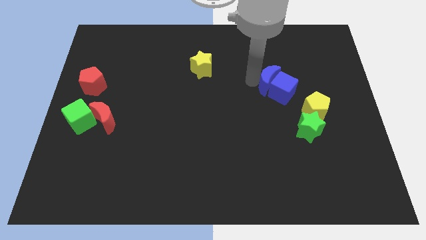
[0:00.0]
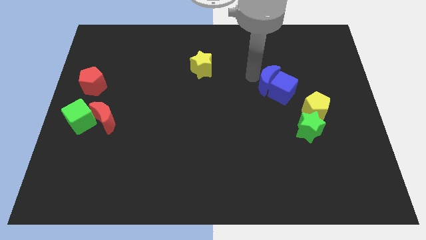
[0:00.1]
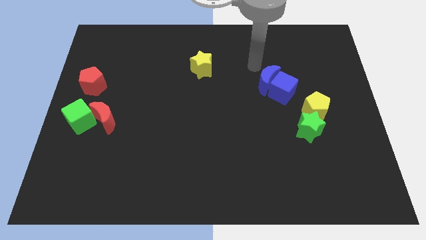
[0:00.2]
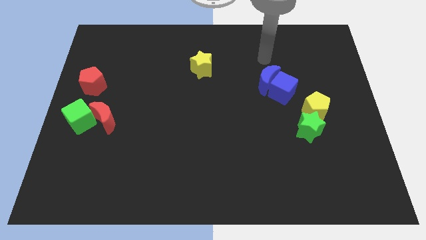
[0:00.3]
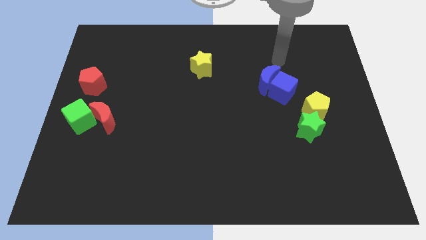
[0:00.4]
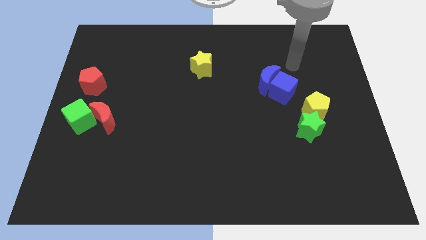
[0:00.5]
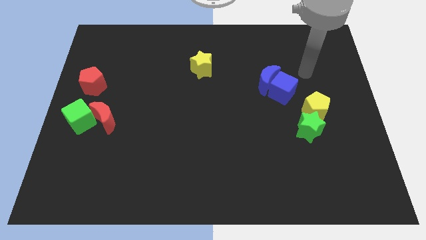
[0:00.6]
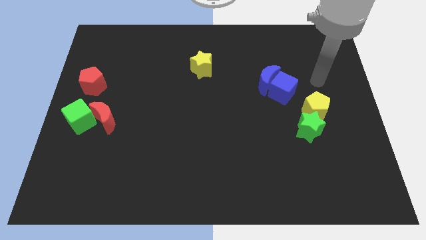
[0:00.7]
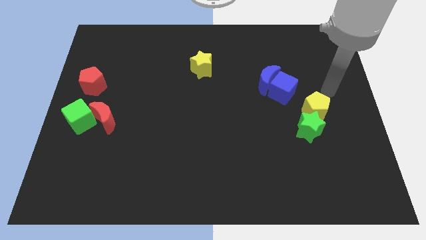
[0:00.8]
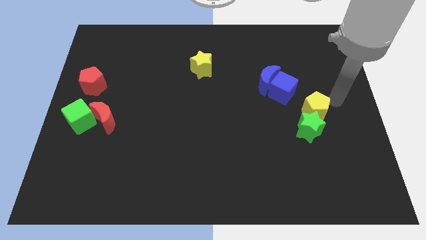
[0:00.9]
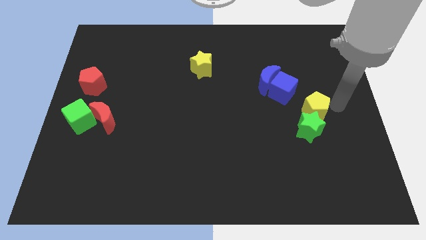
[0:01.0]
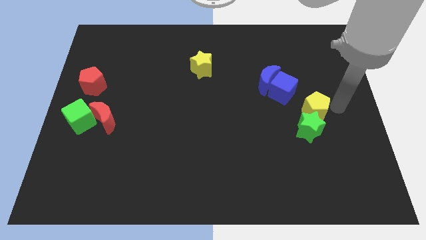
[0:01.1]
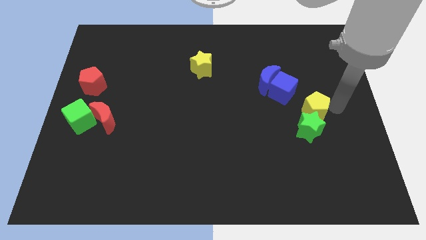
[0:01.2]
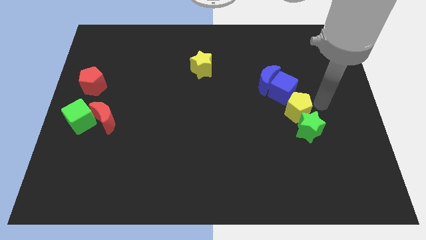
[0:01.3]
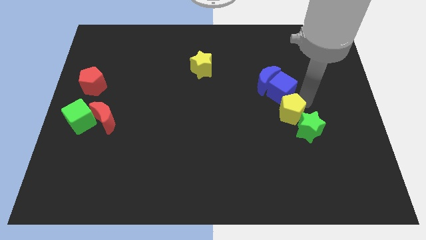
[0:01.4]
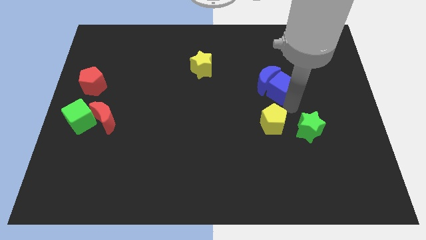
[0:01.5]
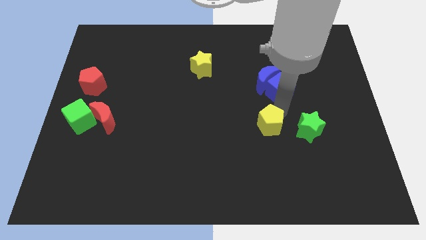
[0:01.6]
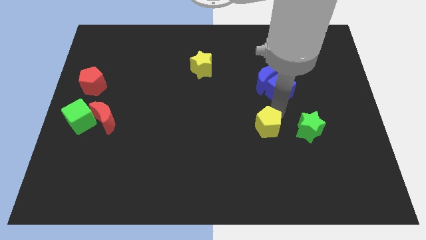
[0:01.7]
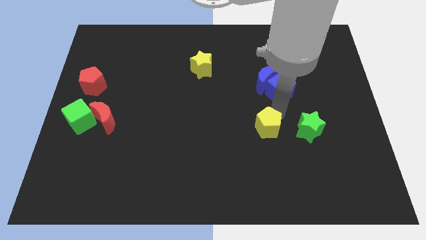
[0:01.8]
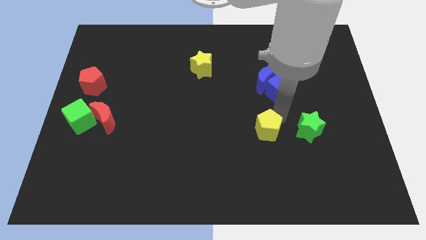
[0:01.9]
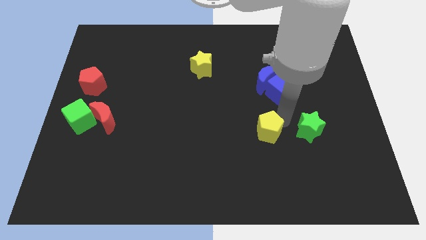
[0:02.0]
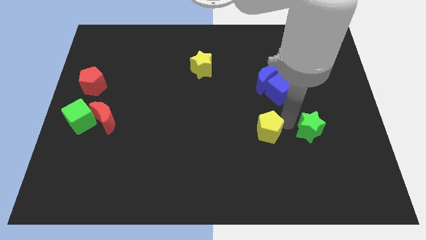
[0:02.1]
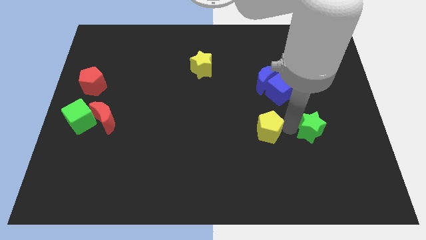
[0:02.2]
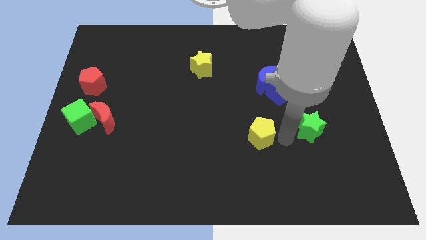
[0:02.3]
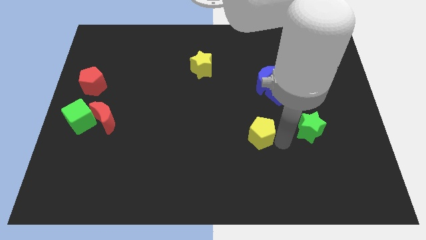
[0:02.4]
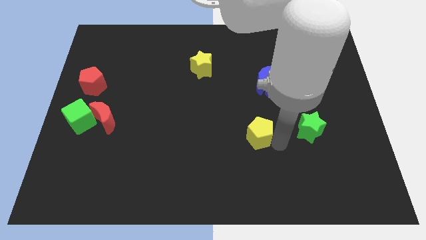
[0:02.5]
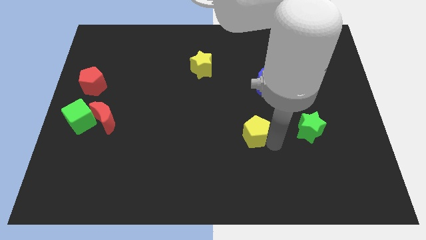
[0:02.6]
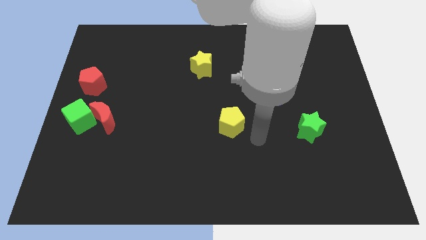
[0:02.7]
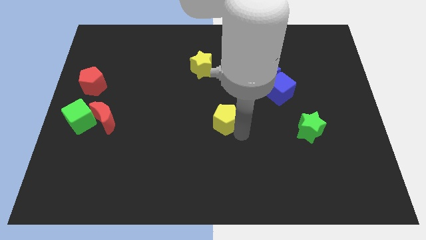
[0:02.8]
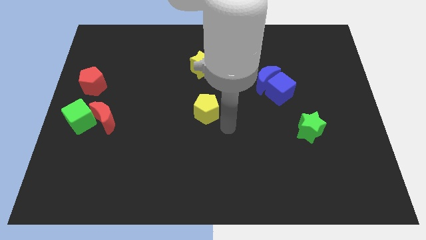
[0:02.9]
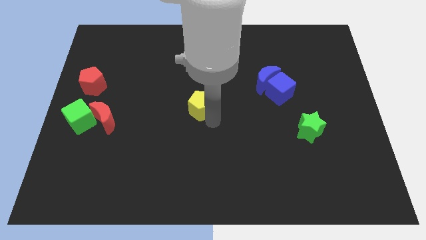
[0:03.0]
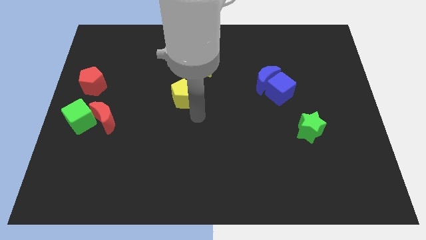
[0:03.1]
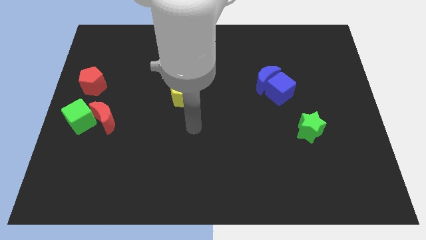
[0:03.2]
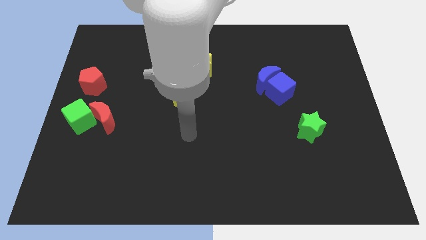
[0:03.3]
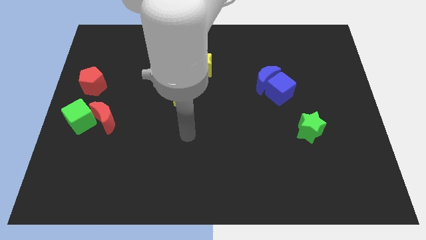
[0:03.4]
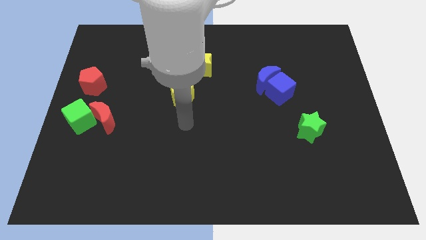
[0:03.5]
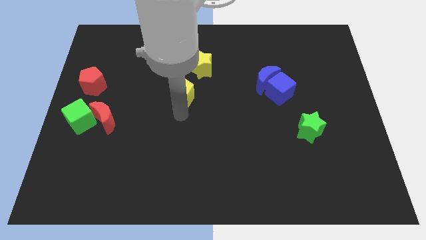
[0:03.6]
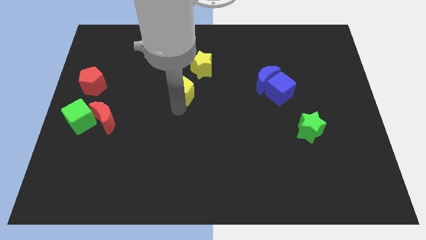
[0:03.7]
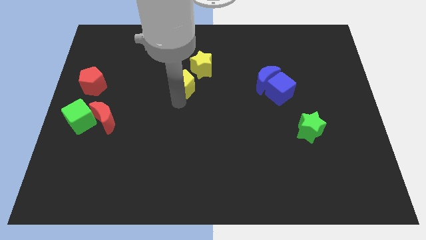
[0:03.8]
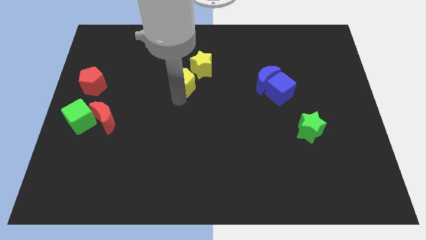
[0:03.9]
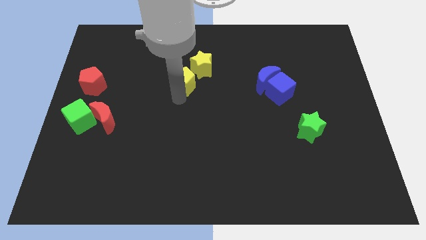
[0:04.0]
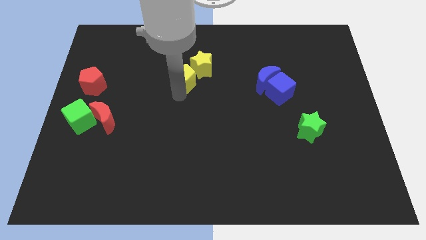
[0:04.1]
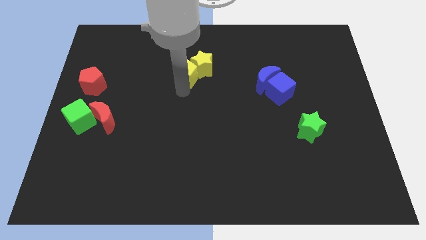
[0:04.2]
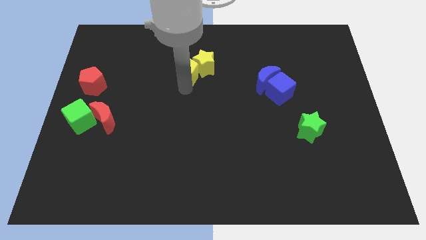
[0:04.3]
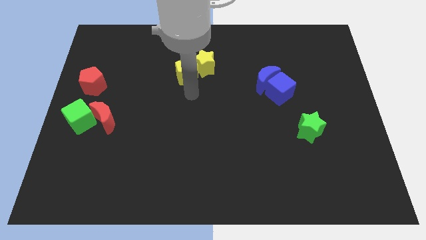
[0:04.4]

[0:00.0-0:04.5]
push the yellow pentagon into the yellow star

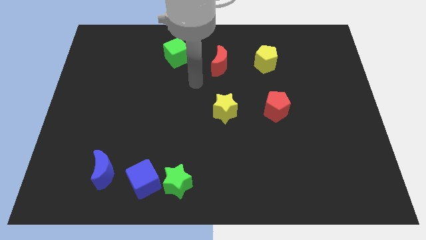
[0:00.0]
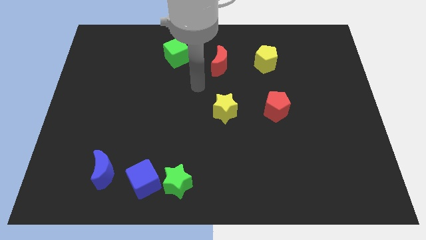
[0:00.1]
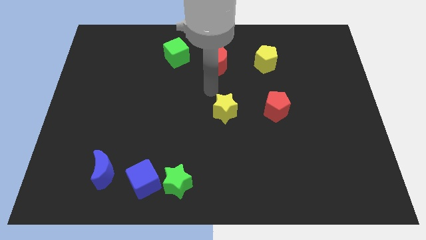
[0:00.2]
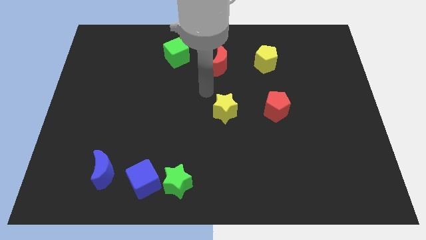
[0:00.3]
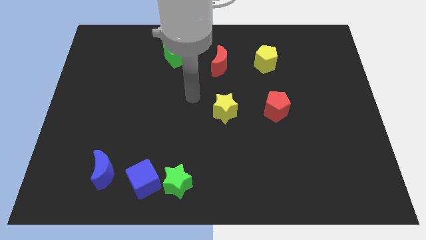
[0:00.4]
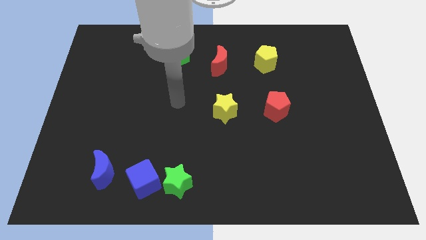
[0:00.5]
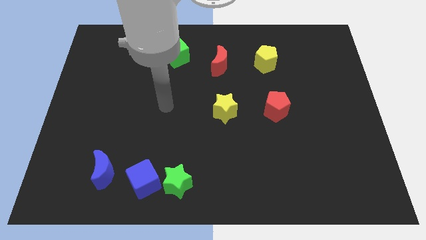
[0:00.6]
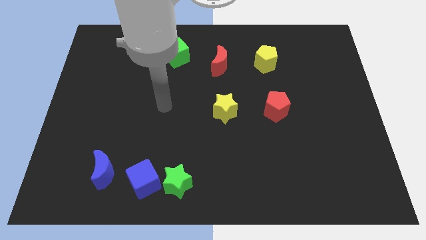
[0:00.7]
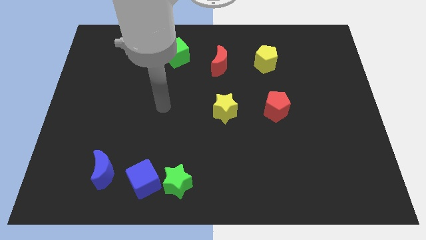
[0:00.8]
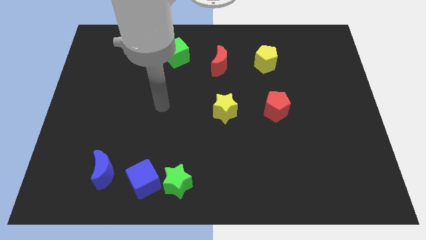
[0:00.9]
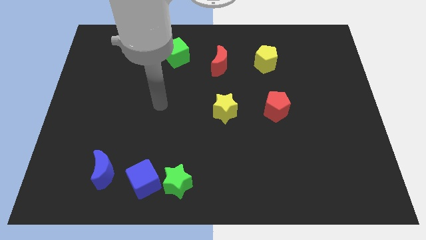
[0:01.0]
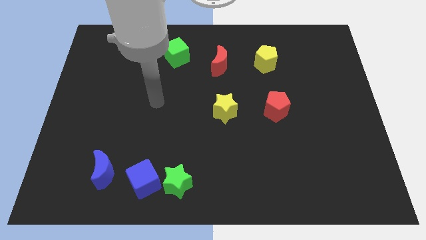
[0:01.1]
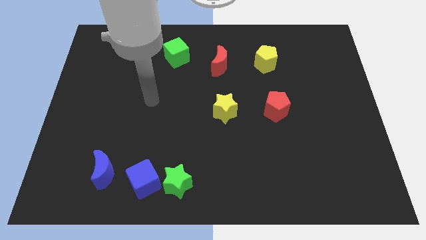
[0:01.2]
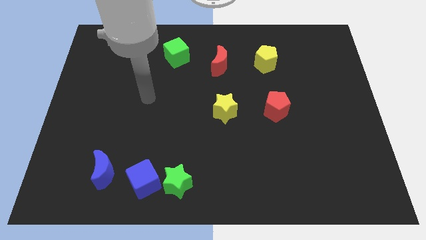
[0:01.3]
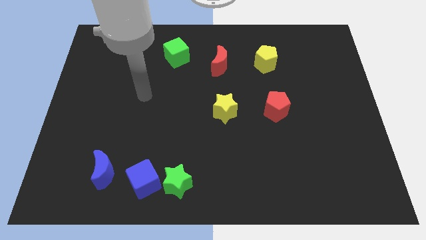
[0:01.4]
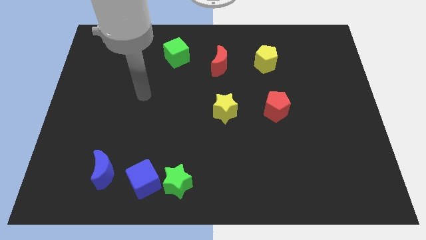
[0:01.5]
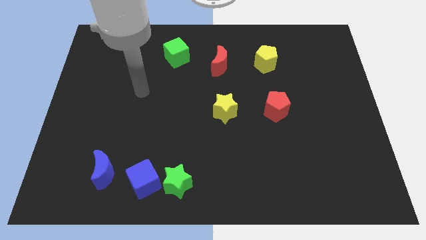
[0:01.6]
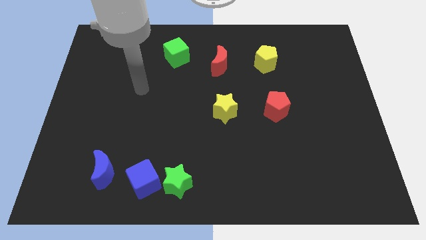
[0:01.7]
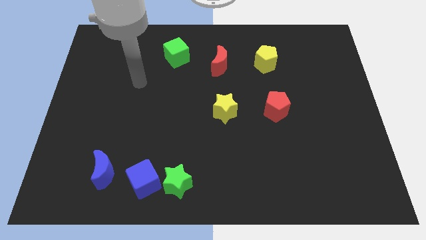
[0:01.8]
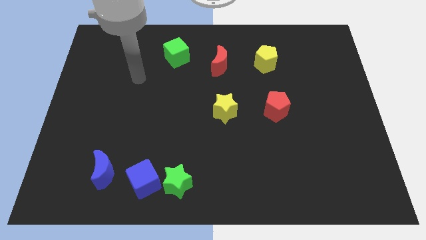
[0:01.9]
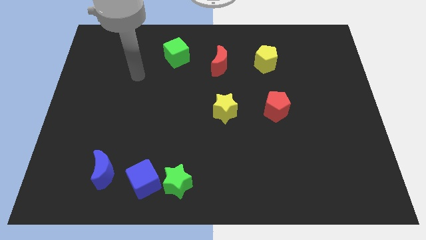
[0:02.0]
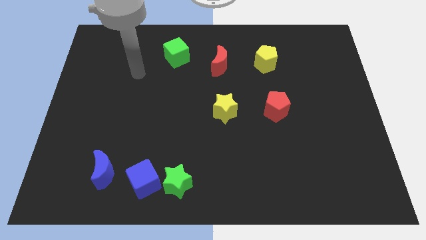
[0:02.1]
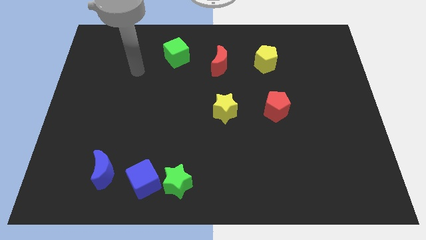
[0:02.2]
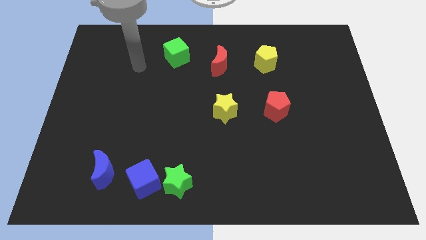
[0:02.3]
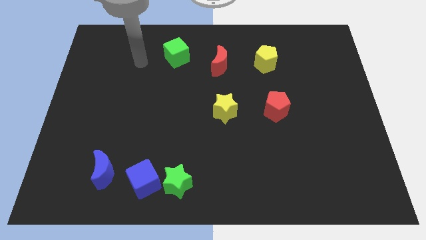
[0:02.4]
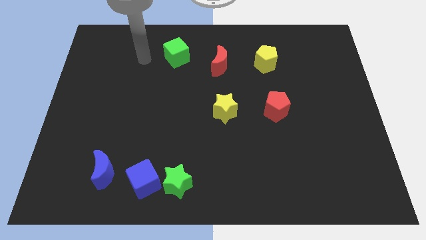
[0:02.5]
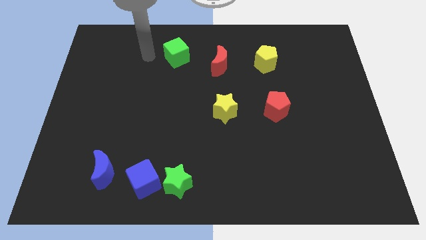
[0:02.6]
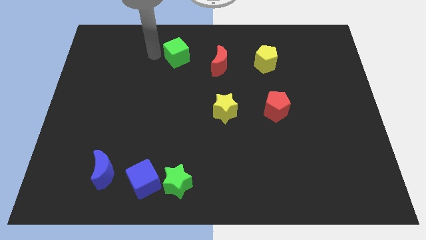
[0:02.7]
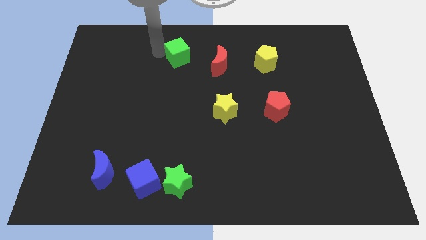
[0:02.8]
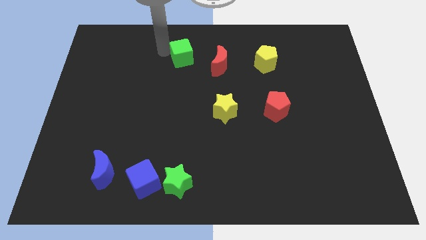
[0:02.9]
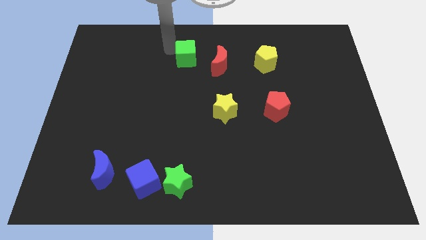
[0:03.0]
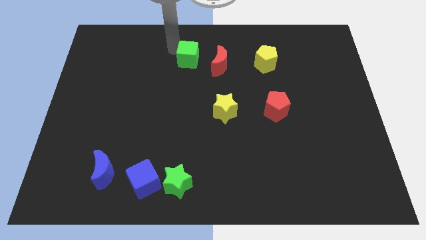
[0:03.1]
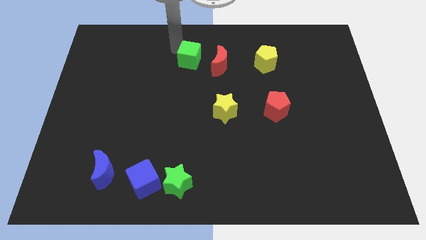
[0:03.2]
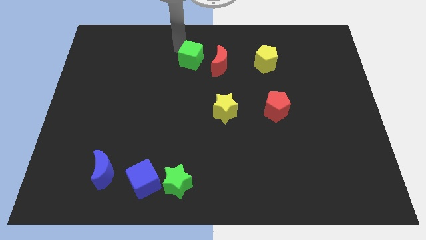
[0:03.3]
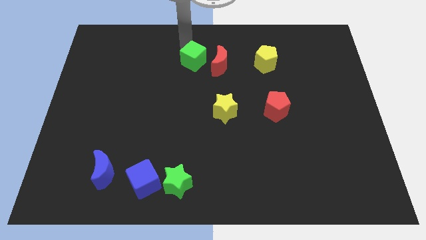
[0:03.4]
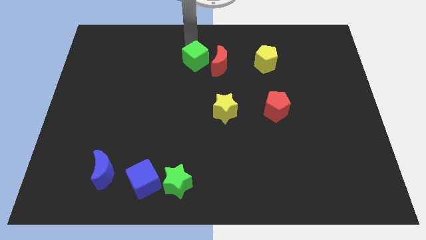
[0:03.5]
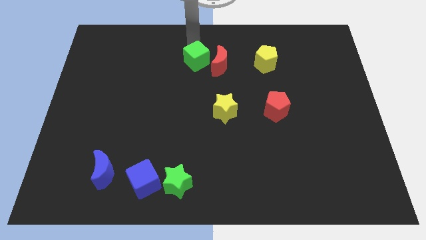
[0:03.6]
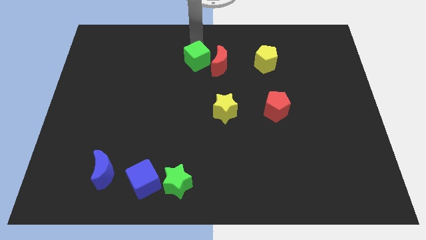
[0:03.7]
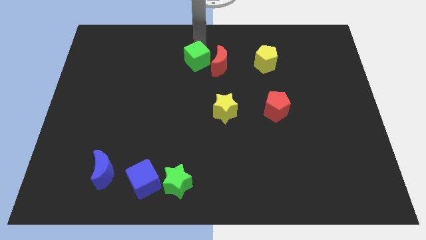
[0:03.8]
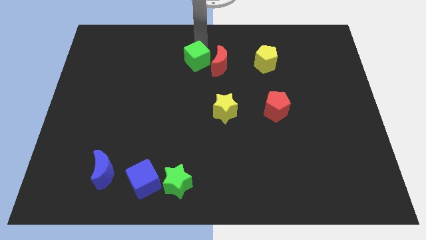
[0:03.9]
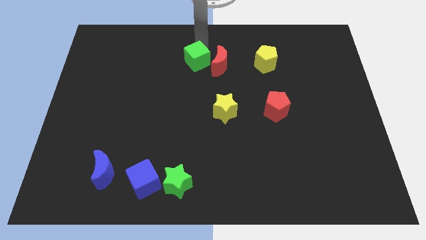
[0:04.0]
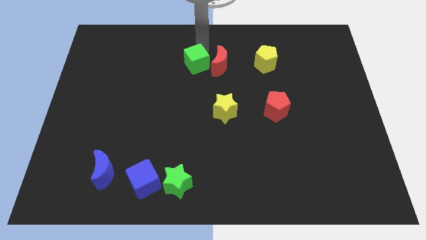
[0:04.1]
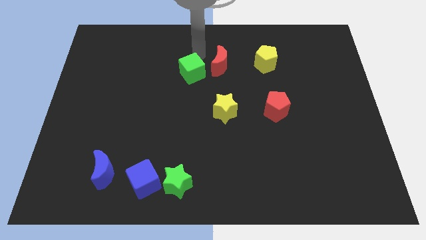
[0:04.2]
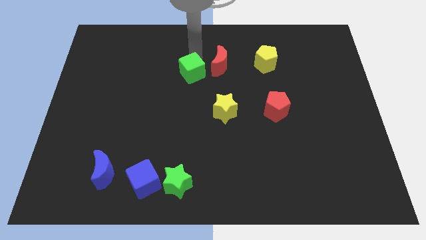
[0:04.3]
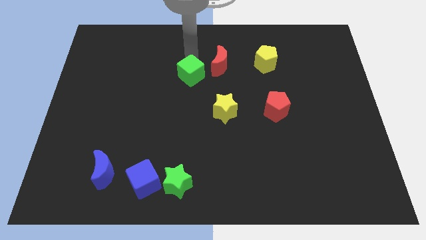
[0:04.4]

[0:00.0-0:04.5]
push the green cube to the bottom of the board

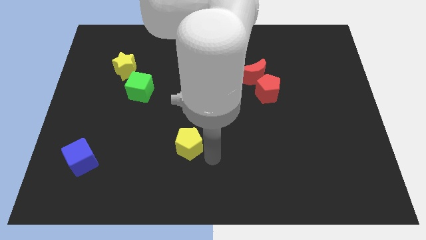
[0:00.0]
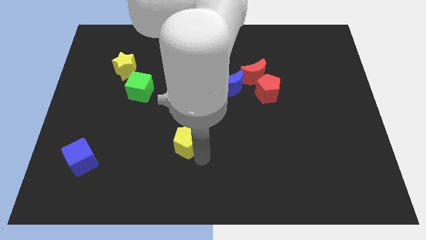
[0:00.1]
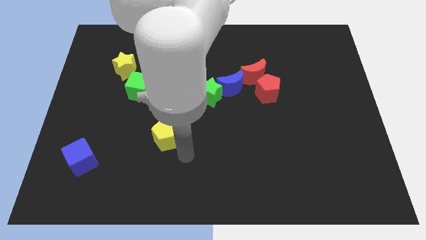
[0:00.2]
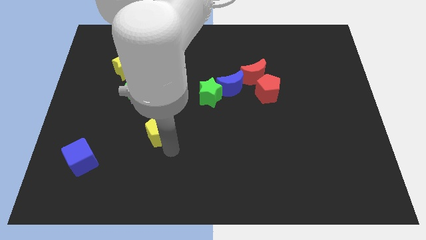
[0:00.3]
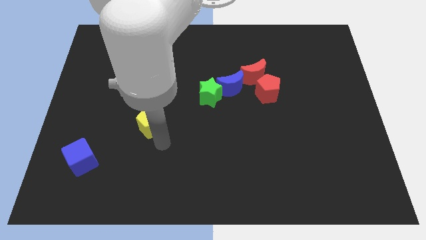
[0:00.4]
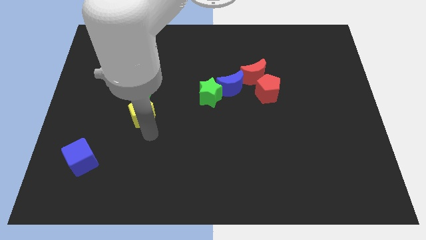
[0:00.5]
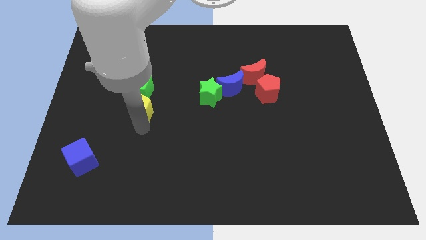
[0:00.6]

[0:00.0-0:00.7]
move yellow pentagon diagonally below green cube
